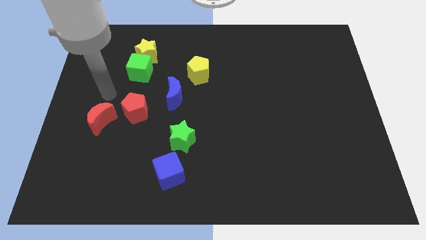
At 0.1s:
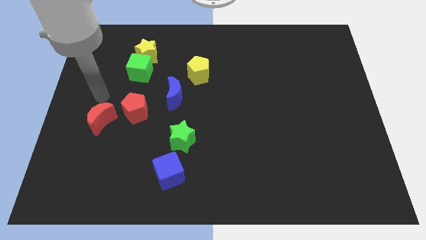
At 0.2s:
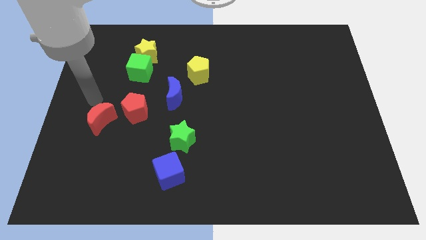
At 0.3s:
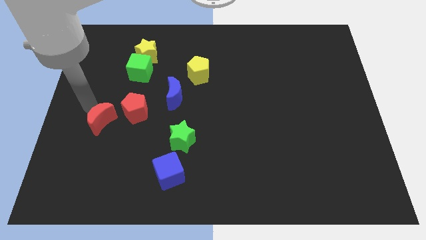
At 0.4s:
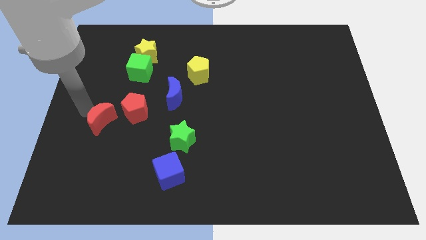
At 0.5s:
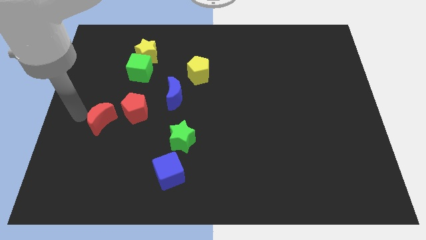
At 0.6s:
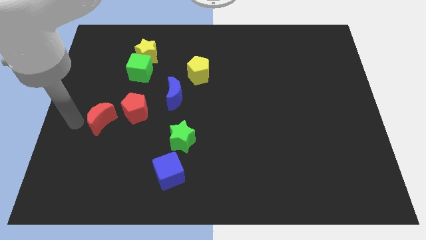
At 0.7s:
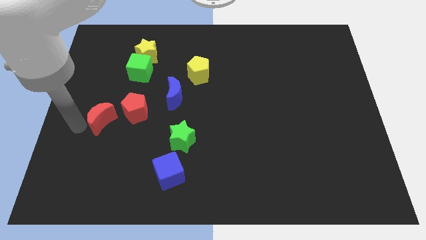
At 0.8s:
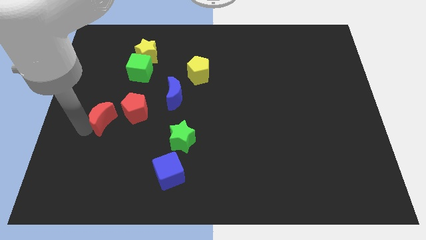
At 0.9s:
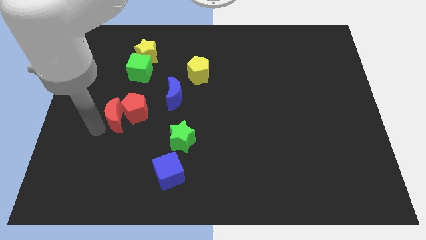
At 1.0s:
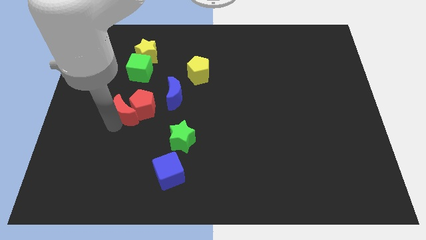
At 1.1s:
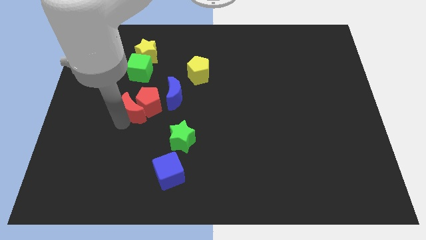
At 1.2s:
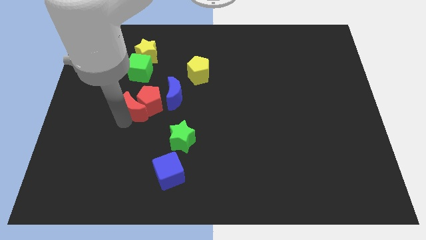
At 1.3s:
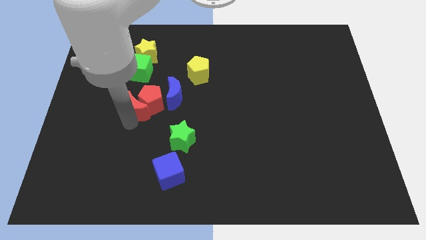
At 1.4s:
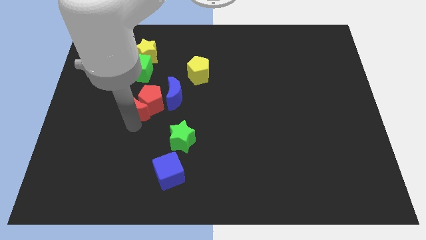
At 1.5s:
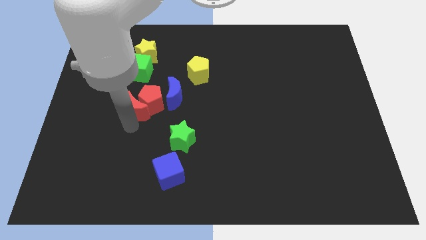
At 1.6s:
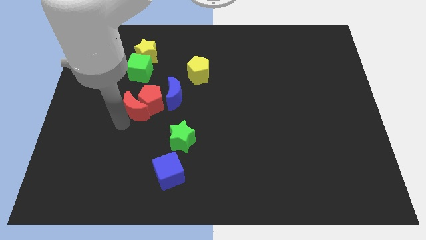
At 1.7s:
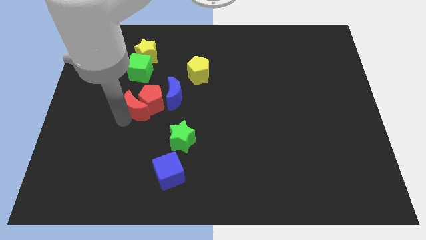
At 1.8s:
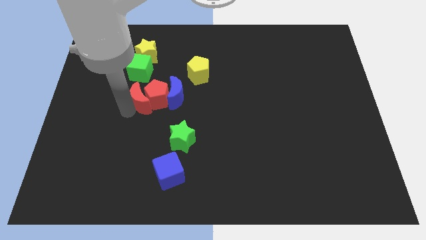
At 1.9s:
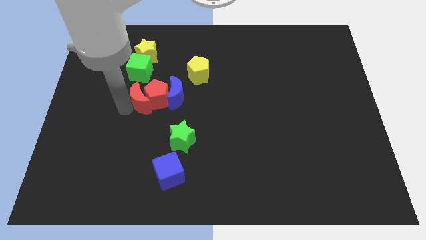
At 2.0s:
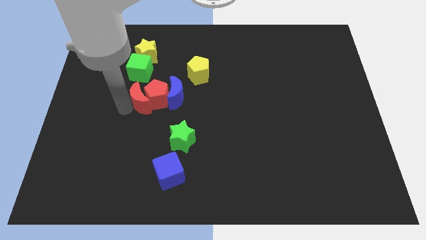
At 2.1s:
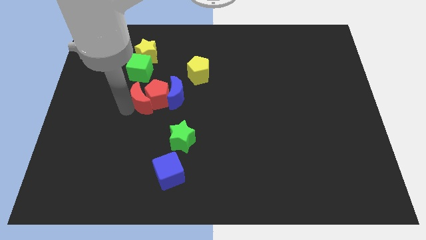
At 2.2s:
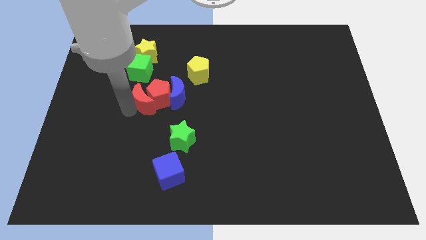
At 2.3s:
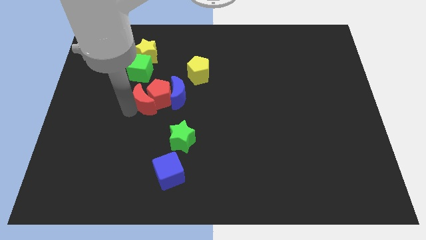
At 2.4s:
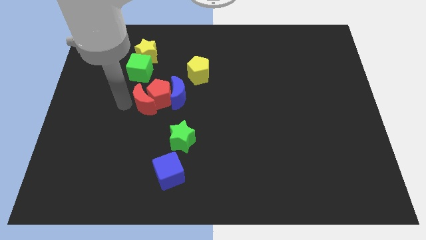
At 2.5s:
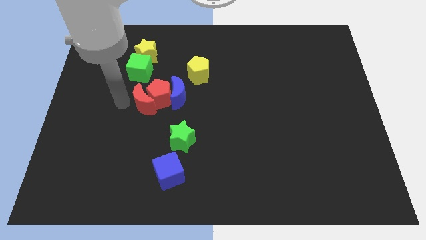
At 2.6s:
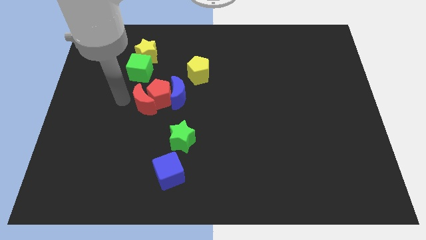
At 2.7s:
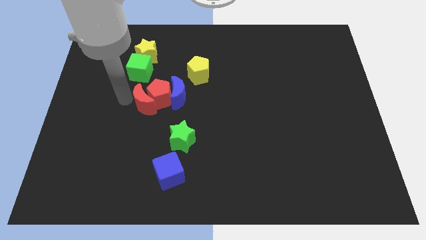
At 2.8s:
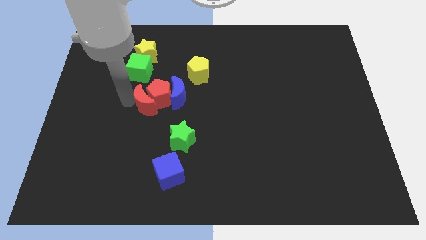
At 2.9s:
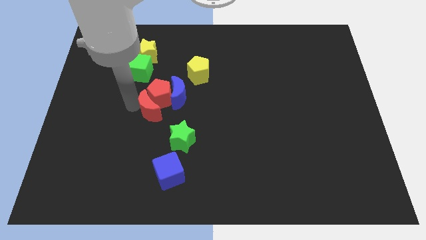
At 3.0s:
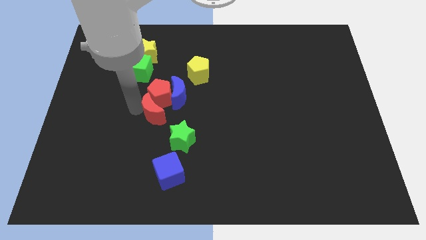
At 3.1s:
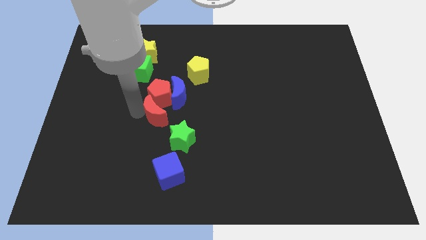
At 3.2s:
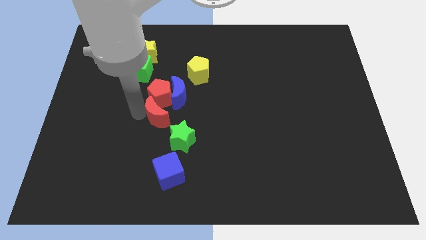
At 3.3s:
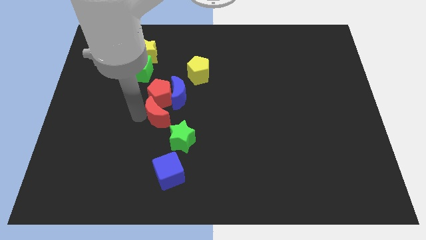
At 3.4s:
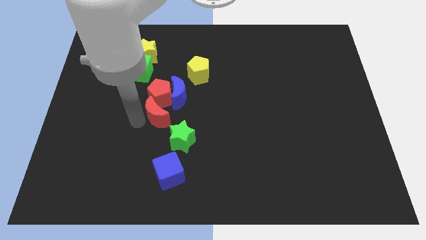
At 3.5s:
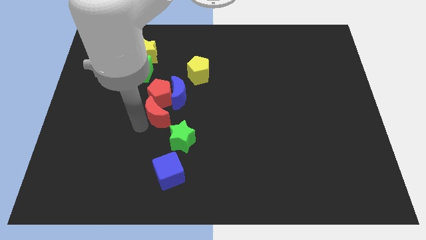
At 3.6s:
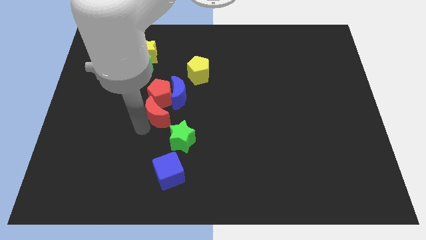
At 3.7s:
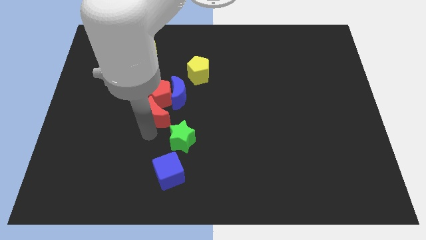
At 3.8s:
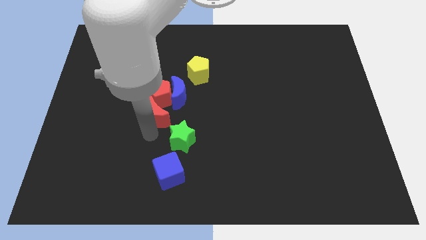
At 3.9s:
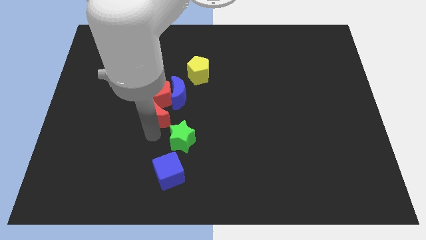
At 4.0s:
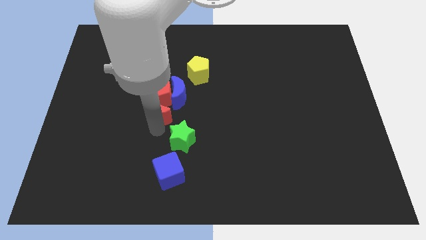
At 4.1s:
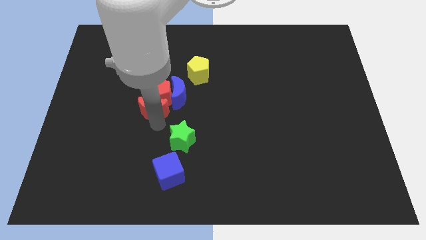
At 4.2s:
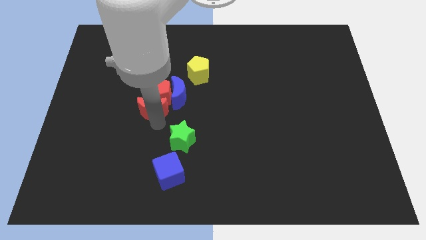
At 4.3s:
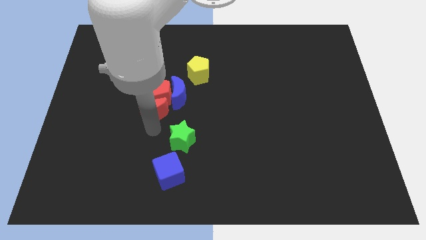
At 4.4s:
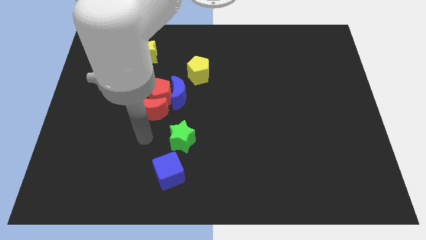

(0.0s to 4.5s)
move the red moon to the bottom side of the red pentagon

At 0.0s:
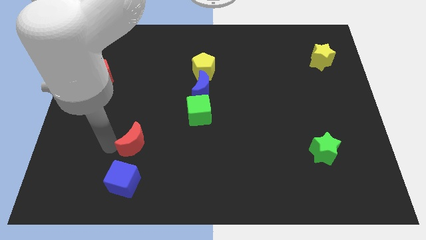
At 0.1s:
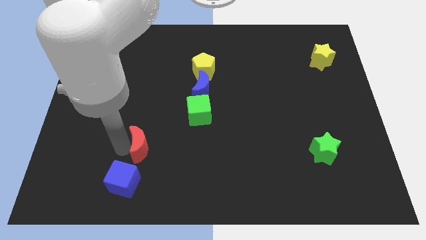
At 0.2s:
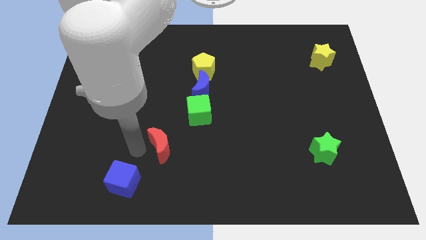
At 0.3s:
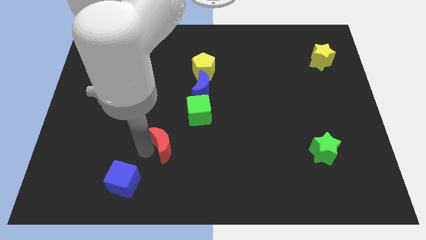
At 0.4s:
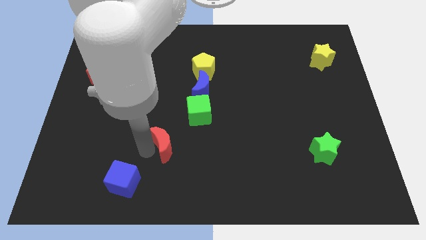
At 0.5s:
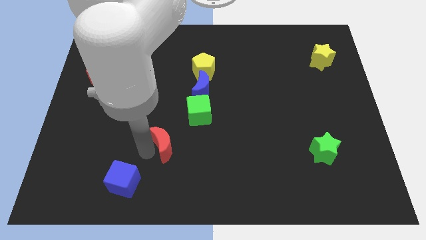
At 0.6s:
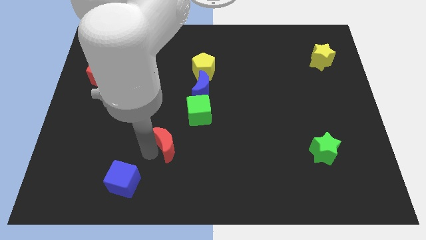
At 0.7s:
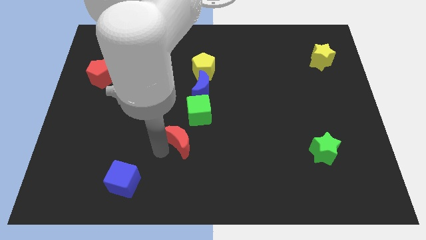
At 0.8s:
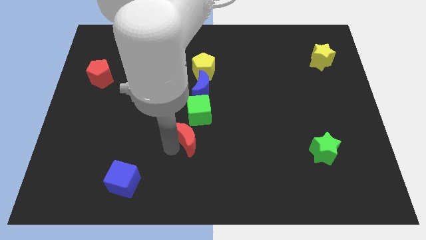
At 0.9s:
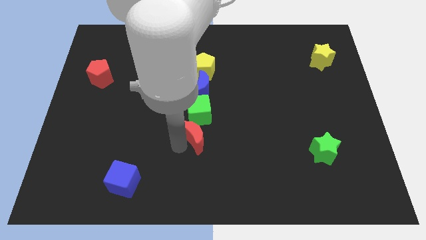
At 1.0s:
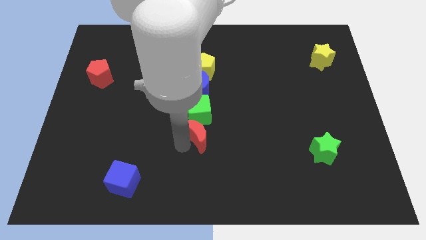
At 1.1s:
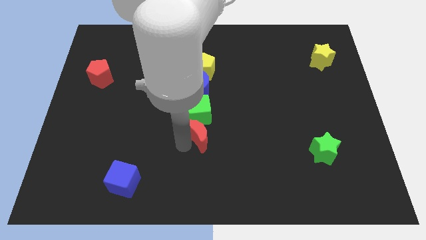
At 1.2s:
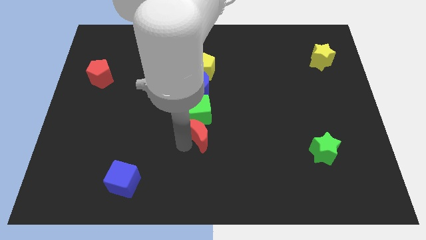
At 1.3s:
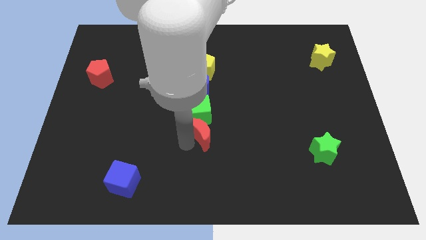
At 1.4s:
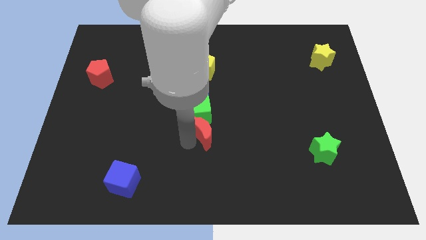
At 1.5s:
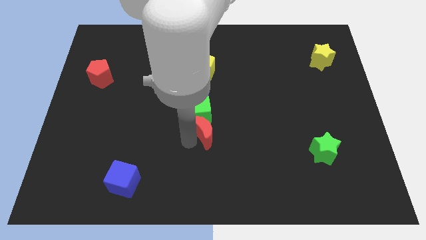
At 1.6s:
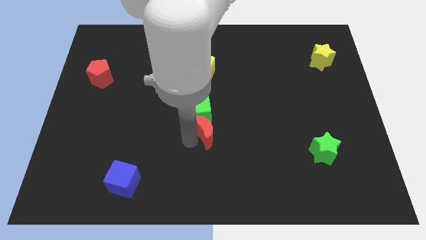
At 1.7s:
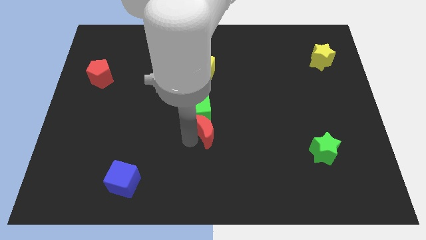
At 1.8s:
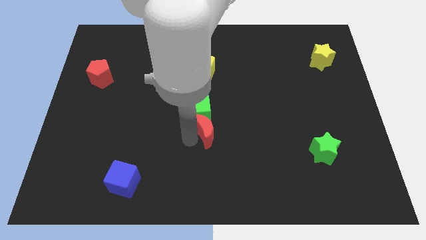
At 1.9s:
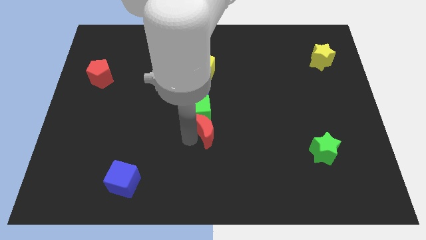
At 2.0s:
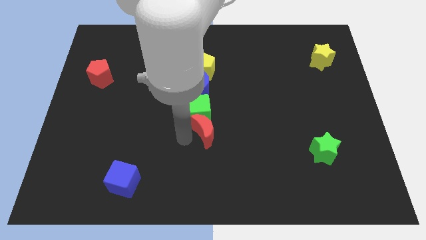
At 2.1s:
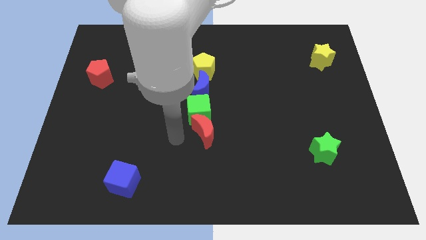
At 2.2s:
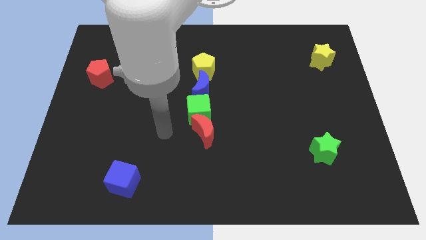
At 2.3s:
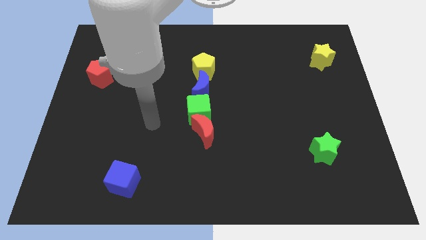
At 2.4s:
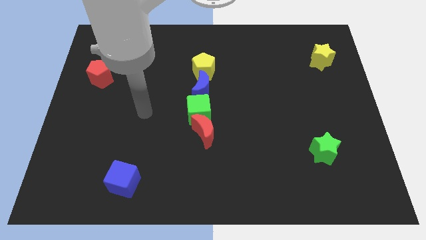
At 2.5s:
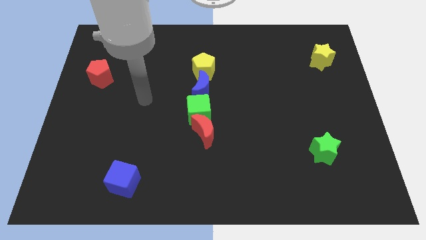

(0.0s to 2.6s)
place the red moon at the bottom of the green cube

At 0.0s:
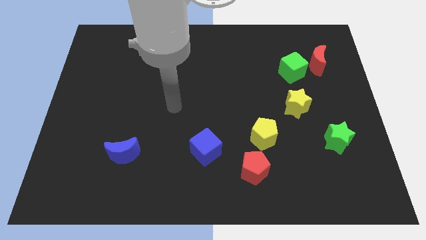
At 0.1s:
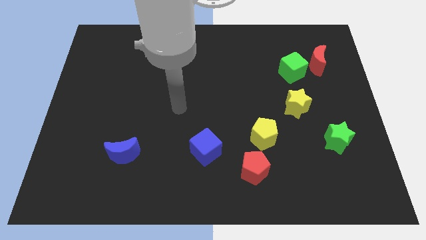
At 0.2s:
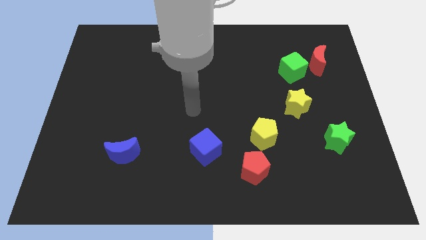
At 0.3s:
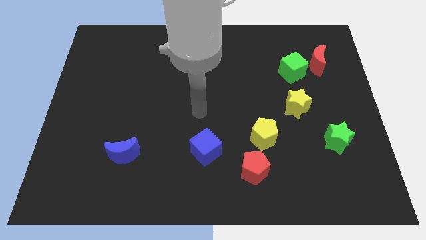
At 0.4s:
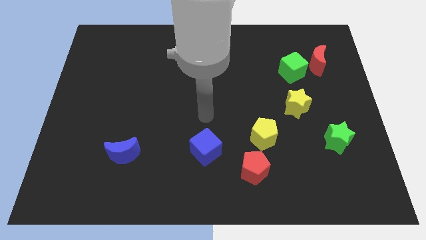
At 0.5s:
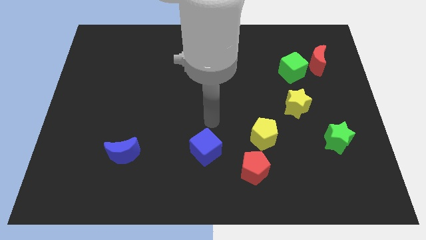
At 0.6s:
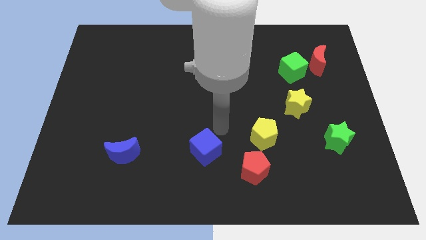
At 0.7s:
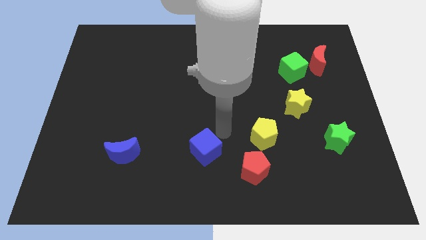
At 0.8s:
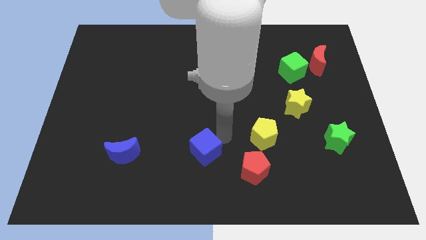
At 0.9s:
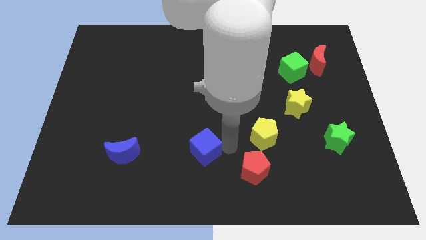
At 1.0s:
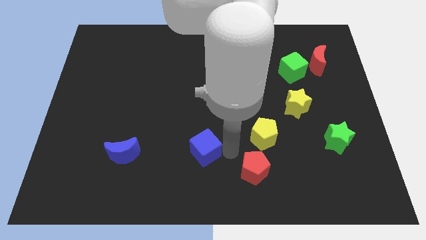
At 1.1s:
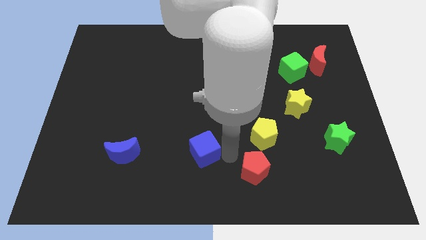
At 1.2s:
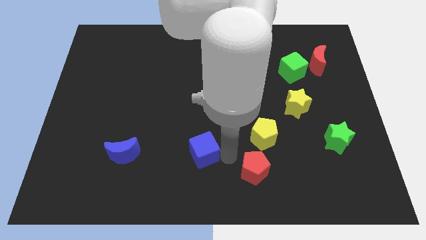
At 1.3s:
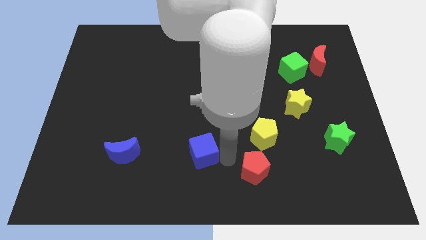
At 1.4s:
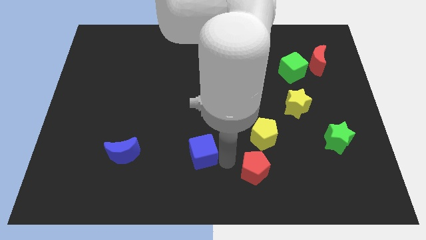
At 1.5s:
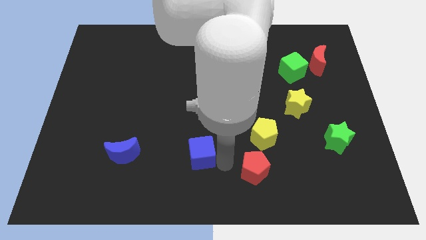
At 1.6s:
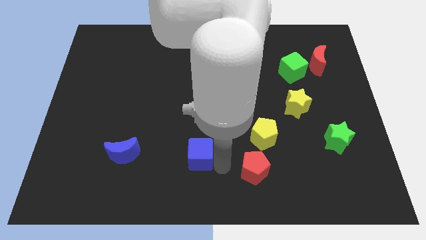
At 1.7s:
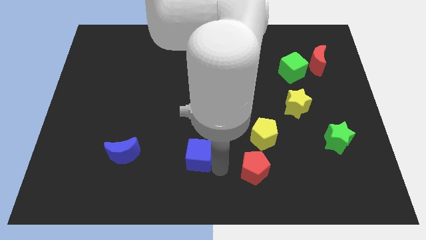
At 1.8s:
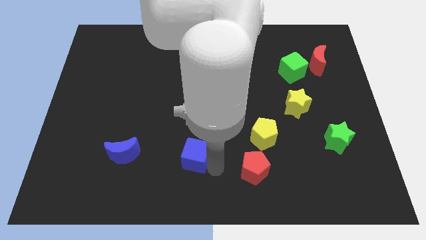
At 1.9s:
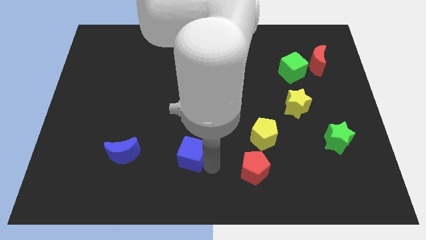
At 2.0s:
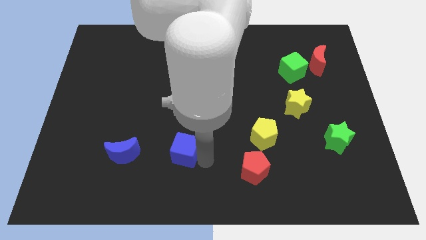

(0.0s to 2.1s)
move blue cube to the right of blue moon
